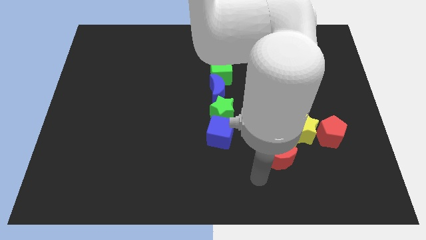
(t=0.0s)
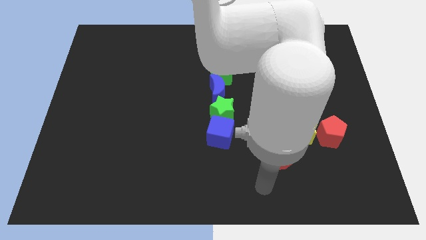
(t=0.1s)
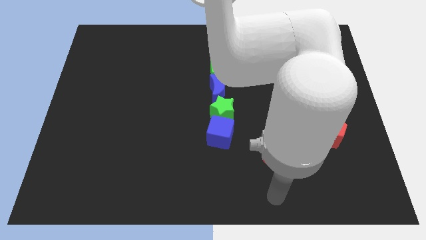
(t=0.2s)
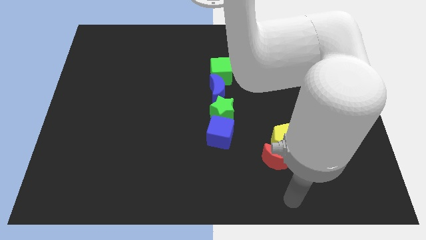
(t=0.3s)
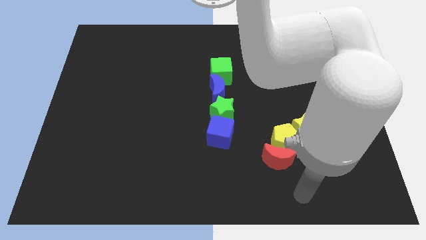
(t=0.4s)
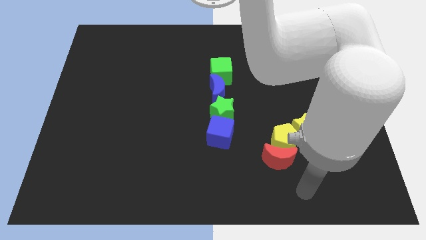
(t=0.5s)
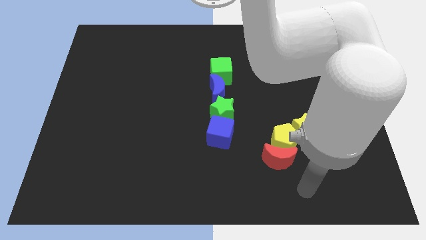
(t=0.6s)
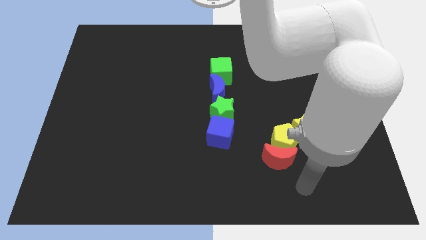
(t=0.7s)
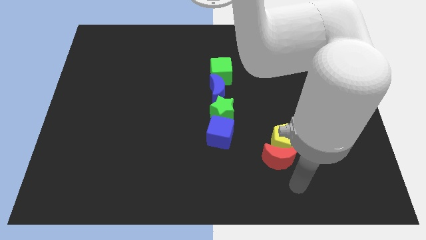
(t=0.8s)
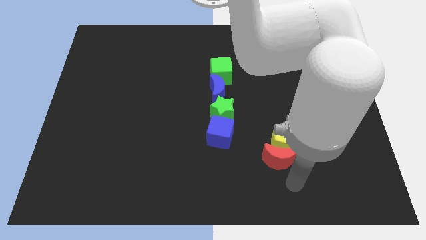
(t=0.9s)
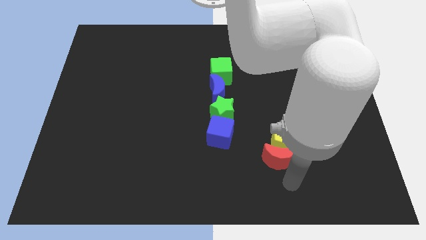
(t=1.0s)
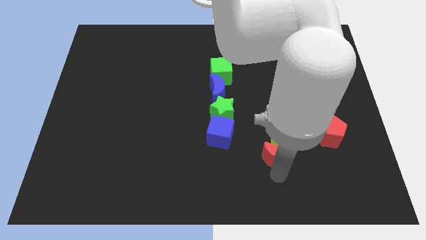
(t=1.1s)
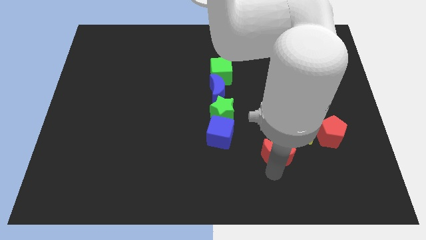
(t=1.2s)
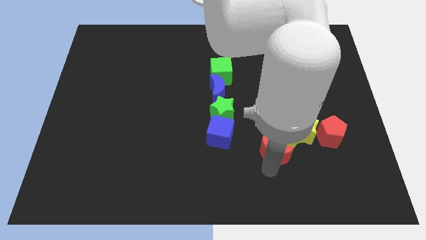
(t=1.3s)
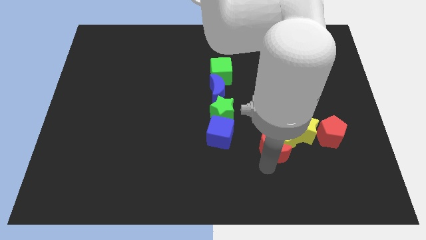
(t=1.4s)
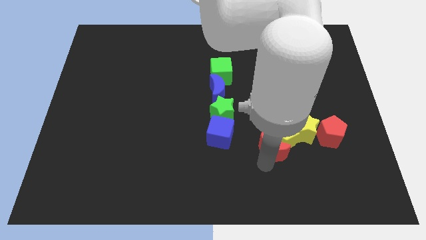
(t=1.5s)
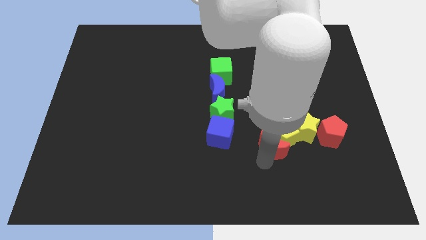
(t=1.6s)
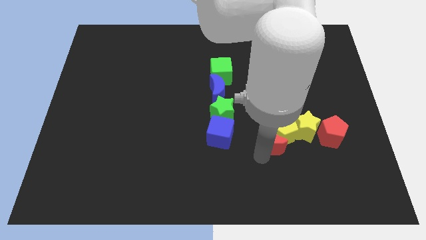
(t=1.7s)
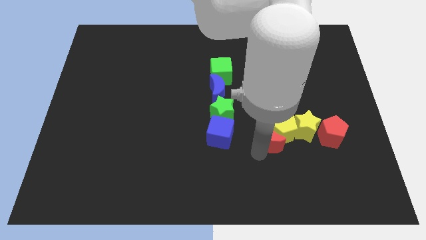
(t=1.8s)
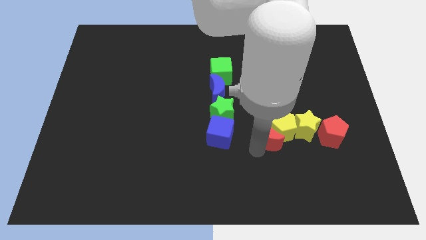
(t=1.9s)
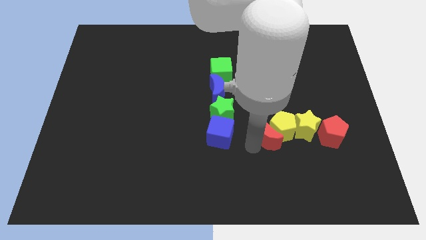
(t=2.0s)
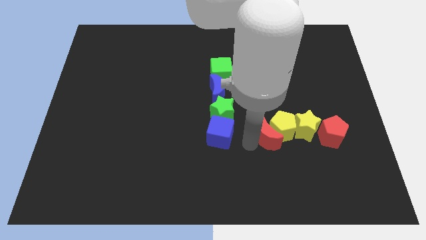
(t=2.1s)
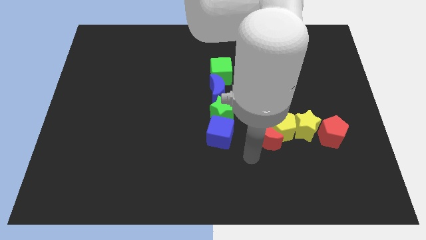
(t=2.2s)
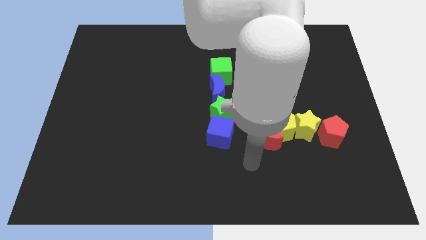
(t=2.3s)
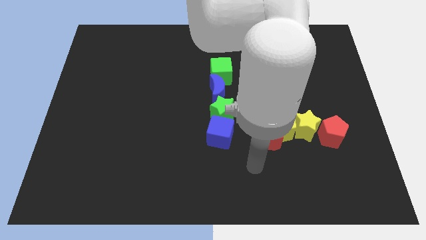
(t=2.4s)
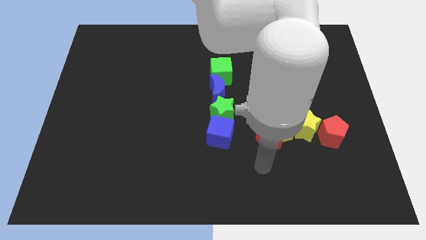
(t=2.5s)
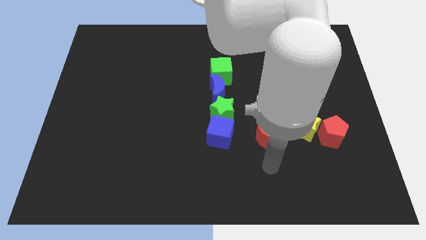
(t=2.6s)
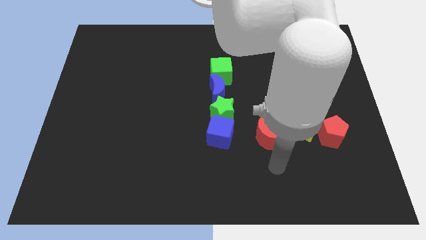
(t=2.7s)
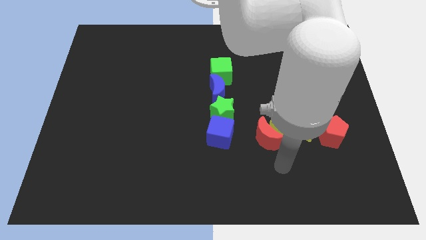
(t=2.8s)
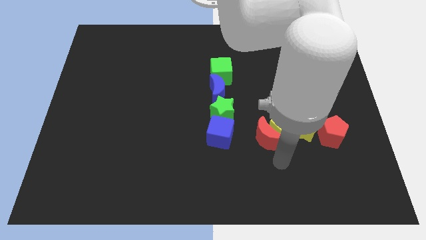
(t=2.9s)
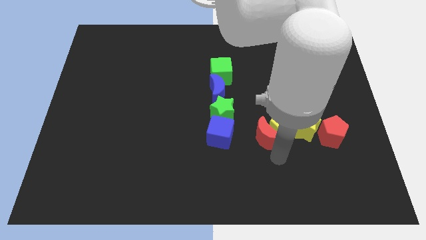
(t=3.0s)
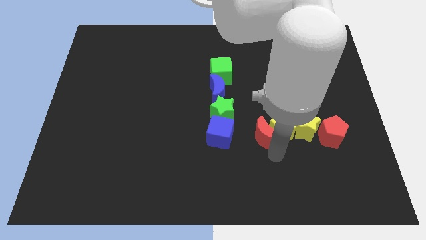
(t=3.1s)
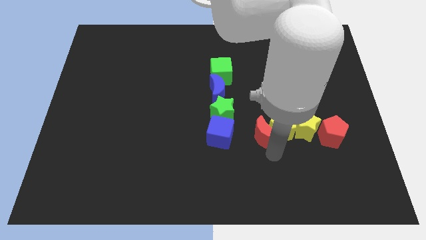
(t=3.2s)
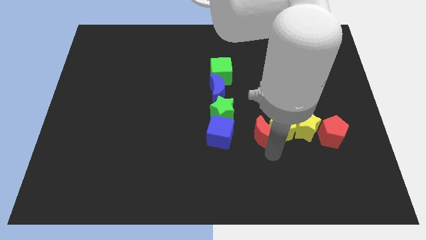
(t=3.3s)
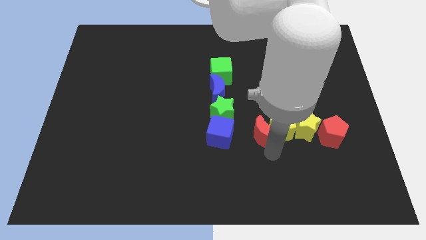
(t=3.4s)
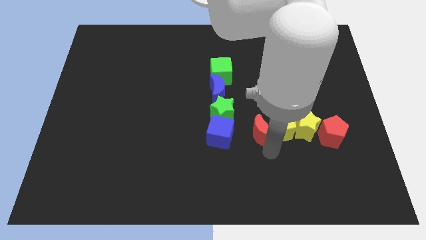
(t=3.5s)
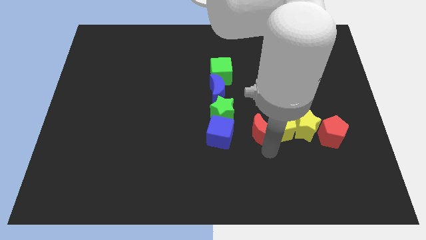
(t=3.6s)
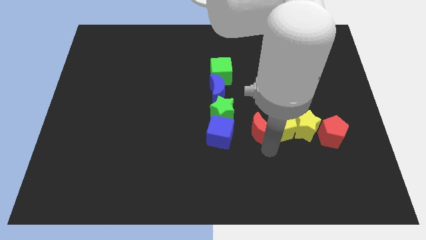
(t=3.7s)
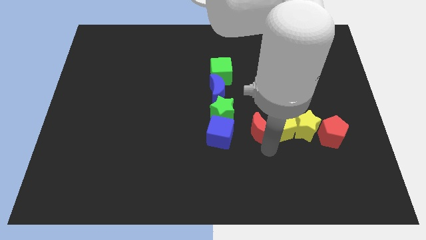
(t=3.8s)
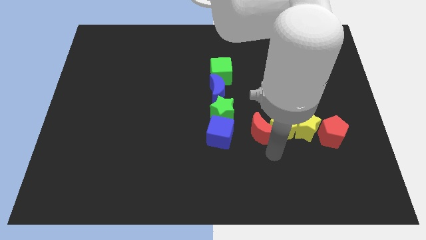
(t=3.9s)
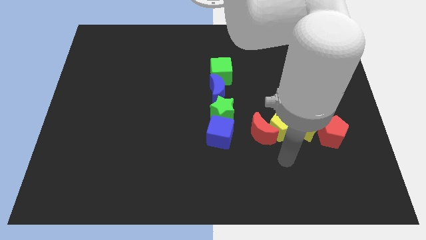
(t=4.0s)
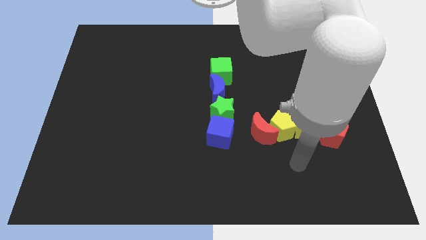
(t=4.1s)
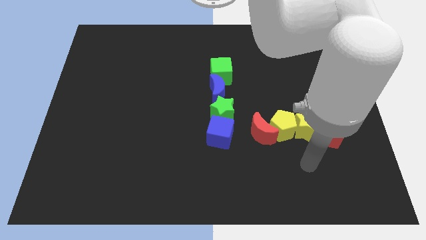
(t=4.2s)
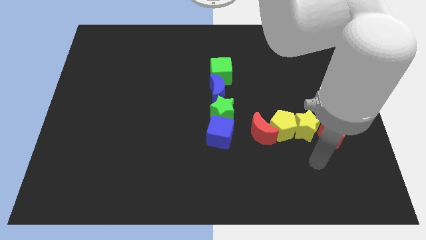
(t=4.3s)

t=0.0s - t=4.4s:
push yellow pentagon with red crescent

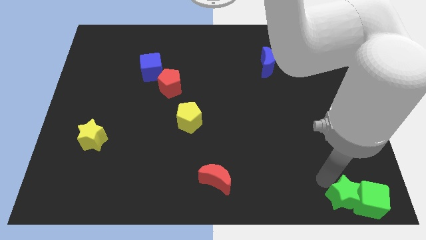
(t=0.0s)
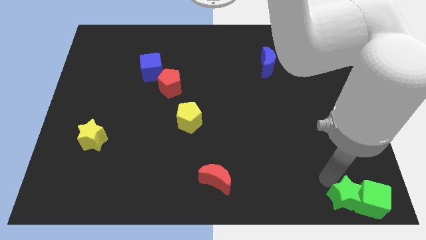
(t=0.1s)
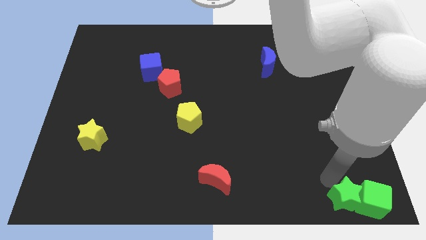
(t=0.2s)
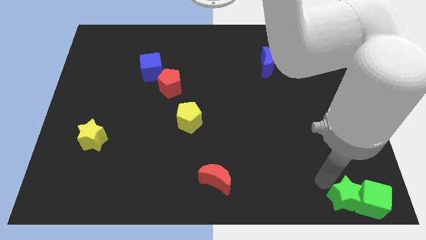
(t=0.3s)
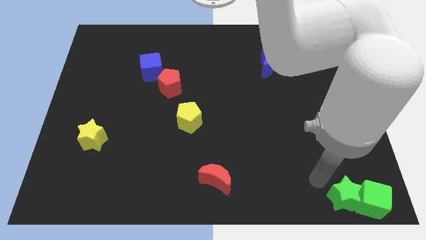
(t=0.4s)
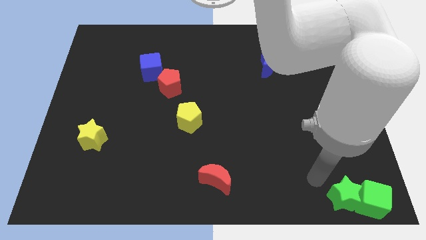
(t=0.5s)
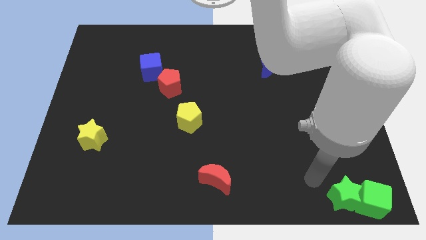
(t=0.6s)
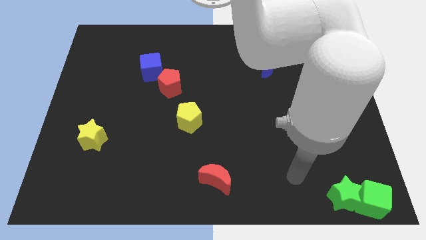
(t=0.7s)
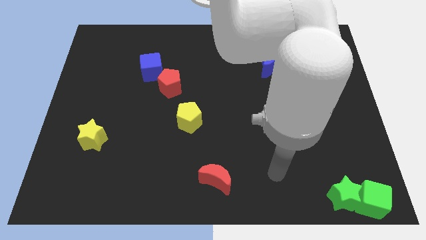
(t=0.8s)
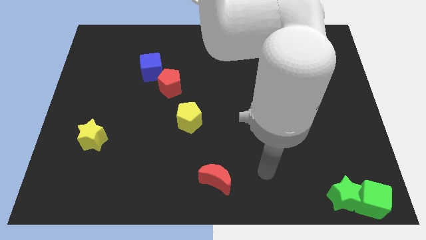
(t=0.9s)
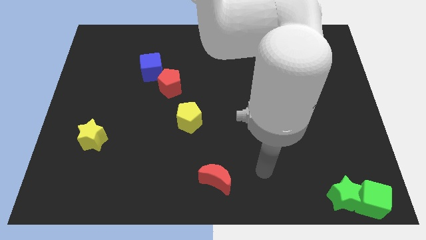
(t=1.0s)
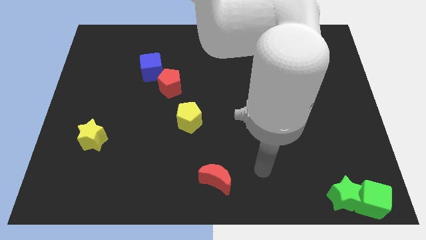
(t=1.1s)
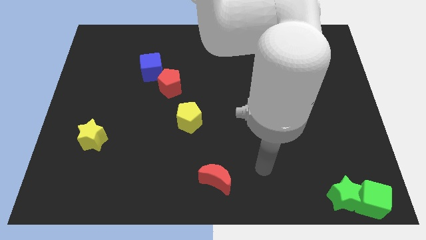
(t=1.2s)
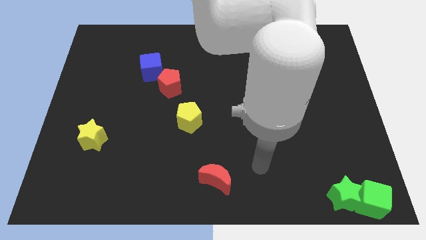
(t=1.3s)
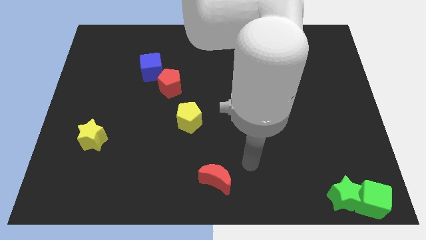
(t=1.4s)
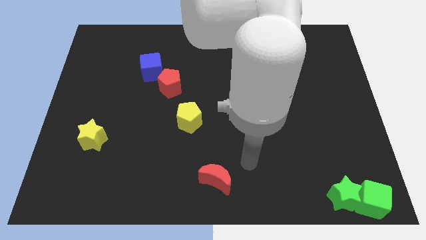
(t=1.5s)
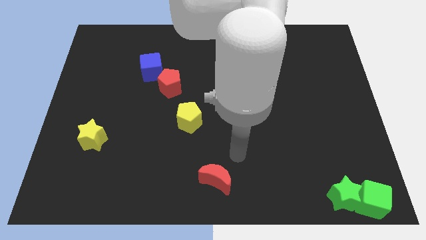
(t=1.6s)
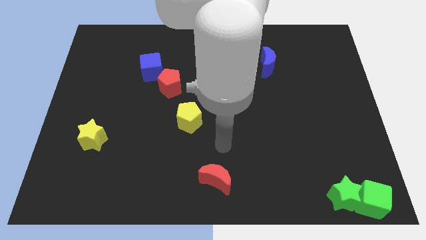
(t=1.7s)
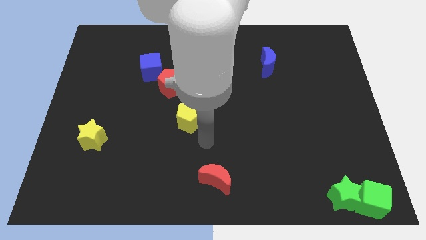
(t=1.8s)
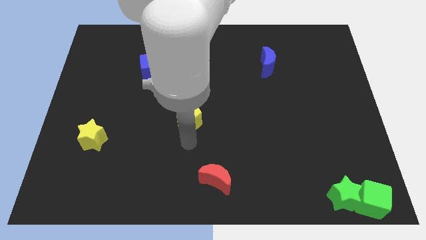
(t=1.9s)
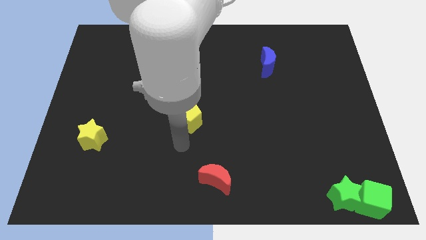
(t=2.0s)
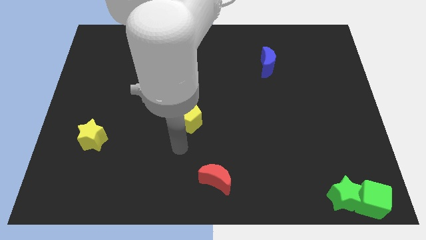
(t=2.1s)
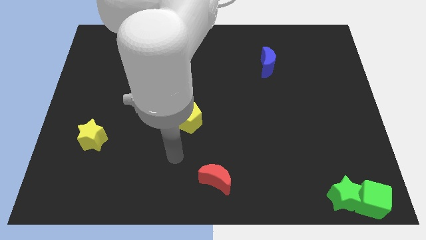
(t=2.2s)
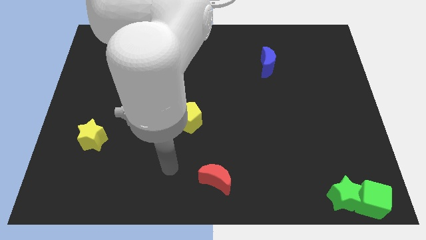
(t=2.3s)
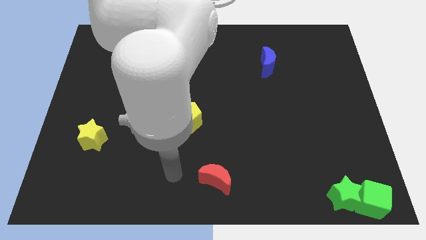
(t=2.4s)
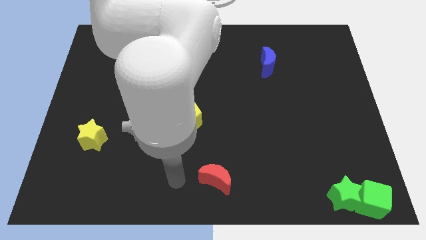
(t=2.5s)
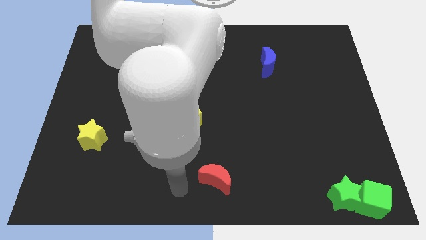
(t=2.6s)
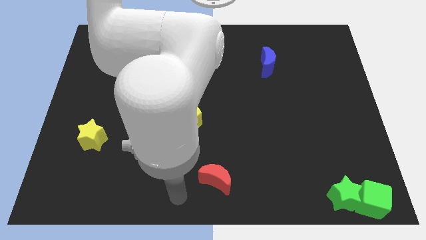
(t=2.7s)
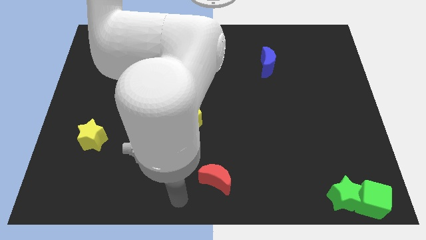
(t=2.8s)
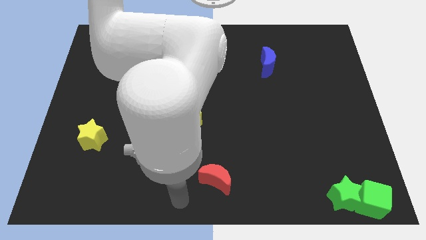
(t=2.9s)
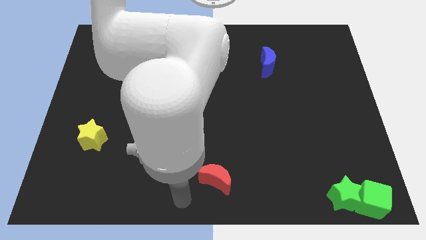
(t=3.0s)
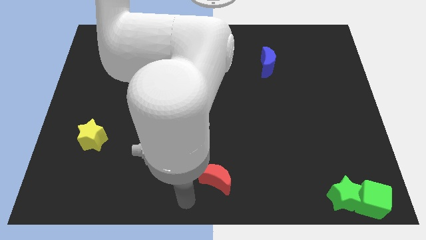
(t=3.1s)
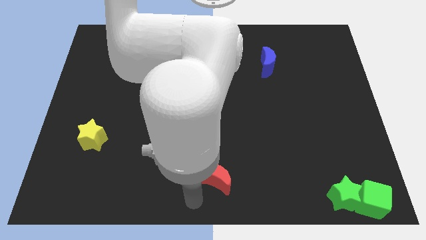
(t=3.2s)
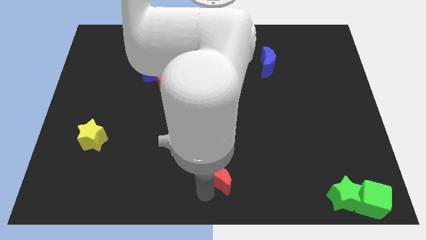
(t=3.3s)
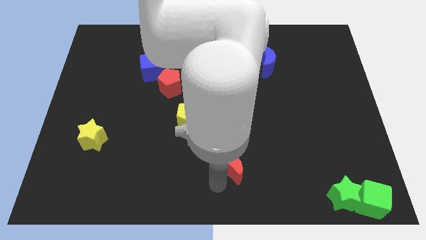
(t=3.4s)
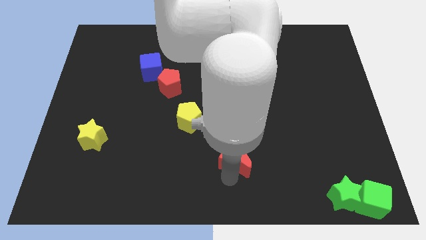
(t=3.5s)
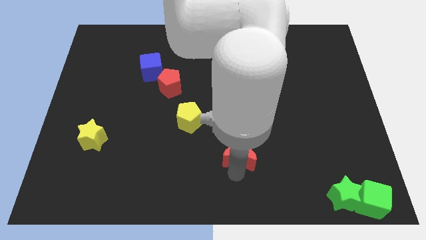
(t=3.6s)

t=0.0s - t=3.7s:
move the arm away from the green star

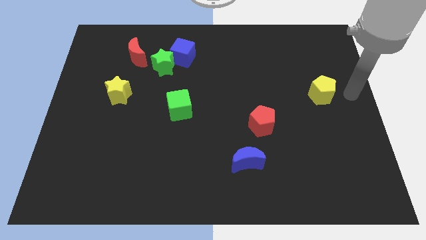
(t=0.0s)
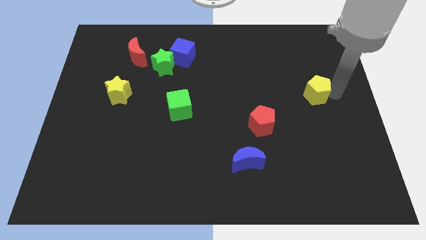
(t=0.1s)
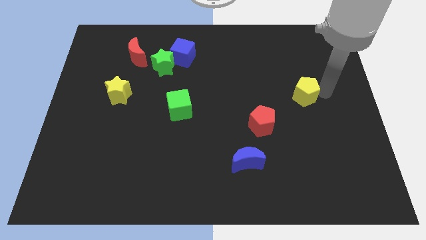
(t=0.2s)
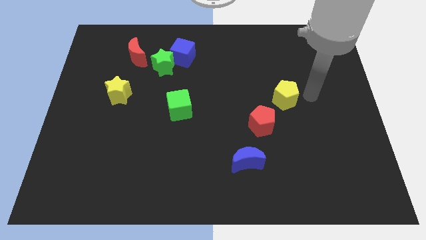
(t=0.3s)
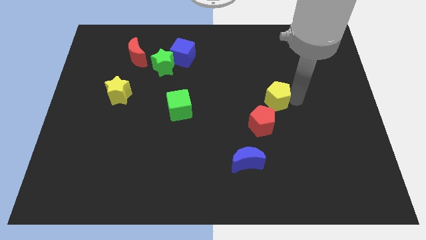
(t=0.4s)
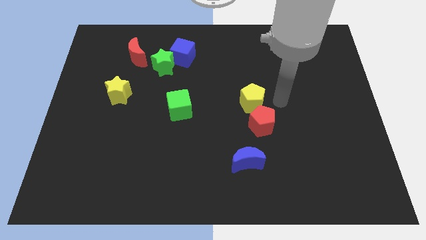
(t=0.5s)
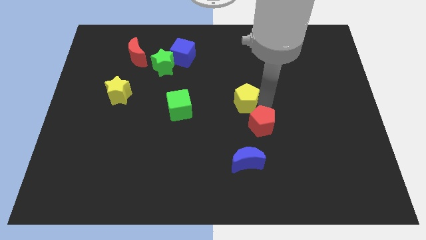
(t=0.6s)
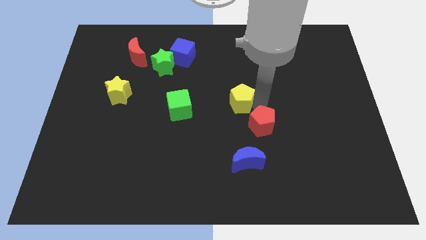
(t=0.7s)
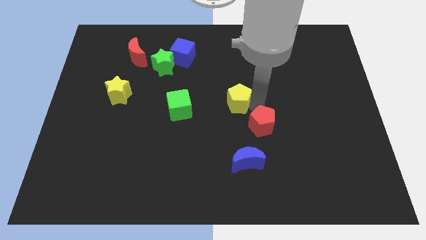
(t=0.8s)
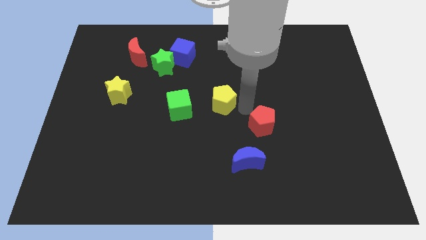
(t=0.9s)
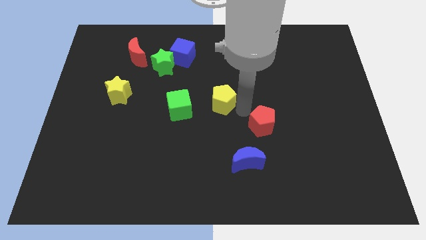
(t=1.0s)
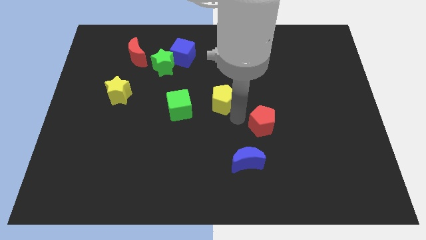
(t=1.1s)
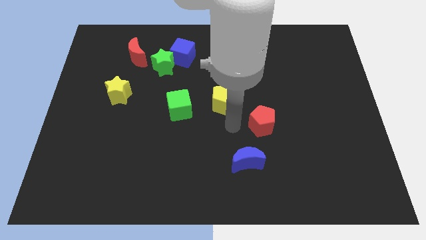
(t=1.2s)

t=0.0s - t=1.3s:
move yellow pentagon towards the right side of the green cube
